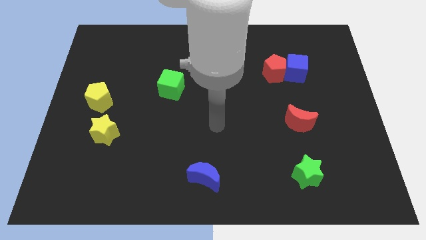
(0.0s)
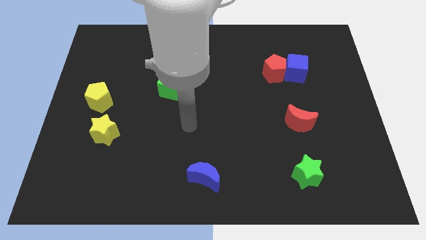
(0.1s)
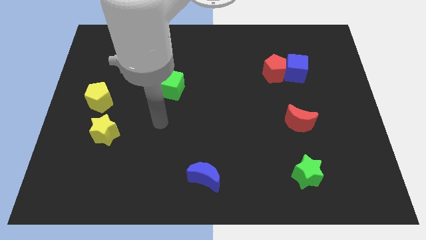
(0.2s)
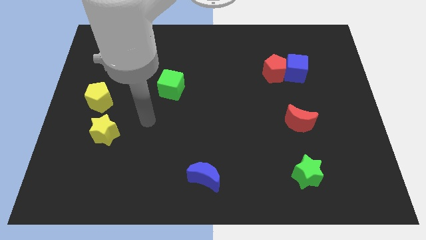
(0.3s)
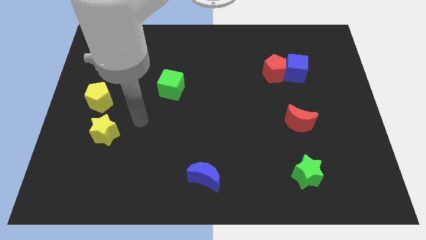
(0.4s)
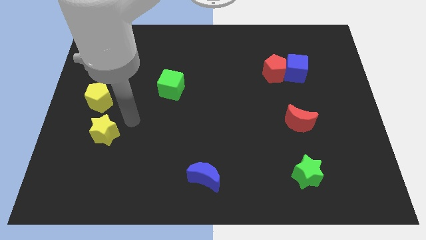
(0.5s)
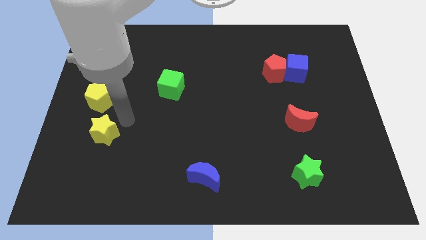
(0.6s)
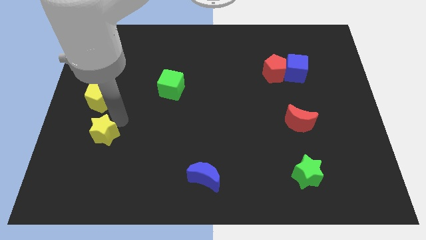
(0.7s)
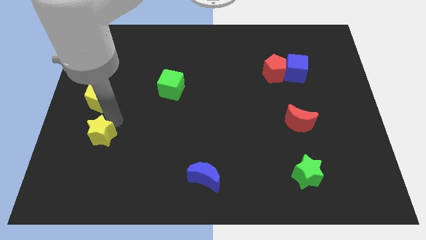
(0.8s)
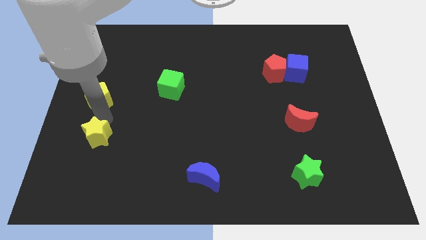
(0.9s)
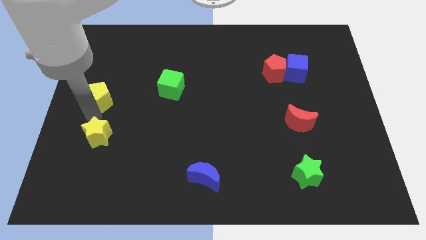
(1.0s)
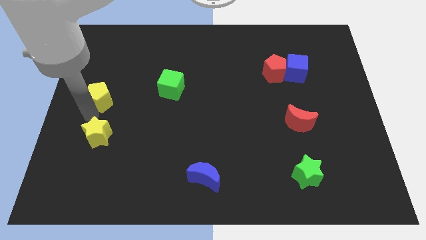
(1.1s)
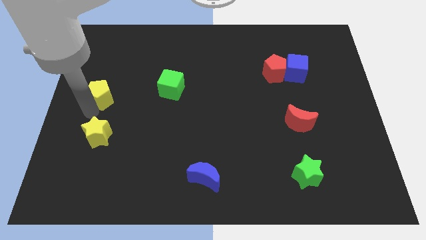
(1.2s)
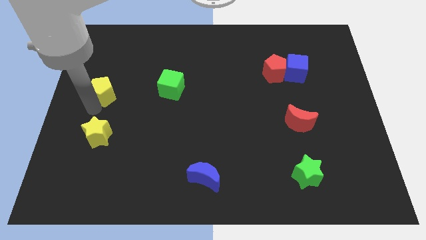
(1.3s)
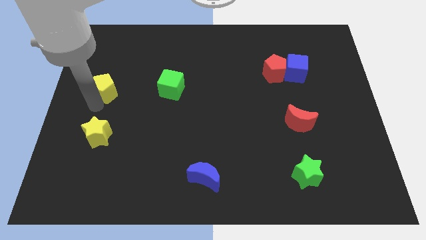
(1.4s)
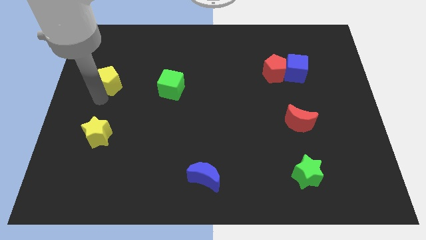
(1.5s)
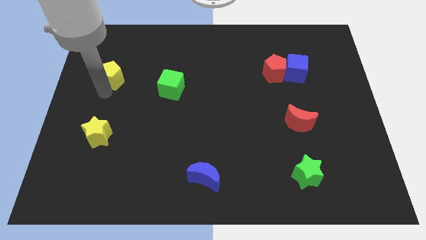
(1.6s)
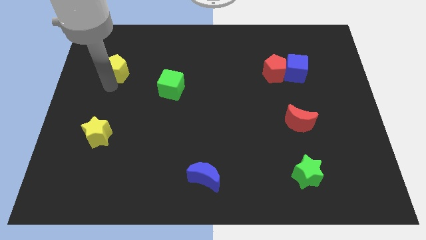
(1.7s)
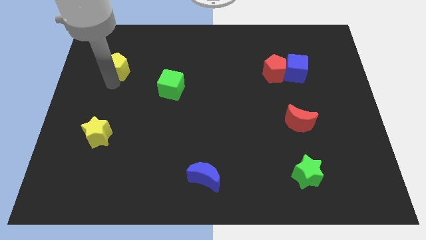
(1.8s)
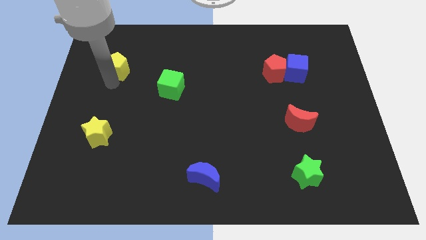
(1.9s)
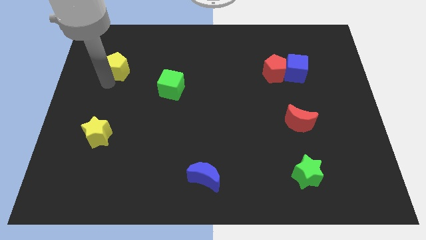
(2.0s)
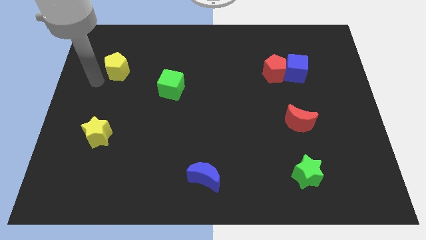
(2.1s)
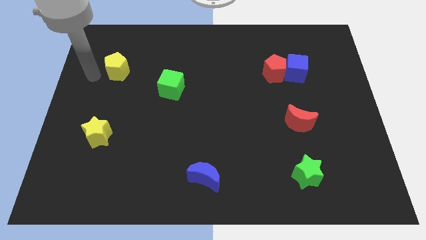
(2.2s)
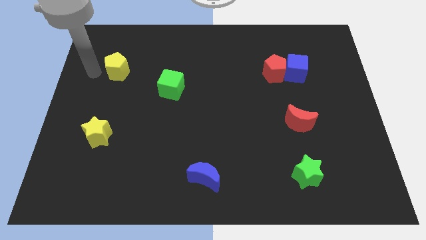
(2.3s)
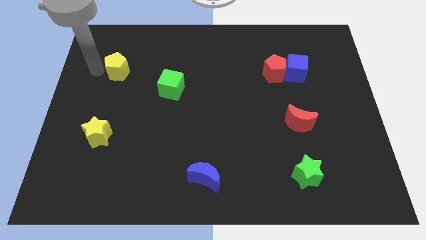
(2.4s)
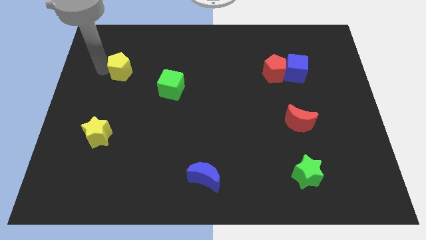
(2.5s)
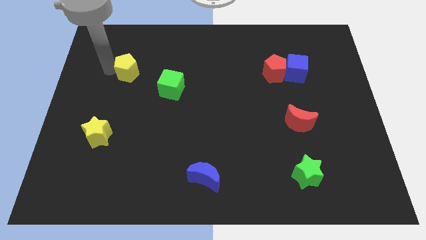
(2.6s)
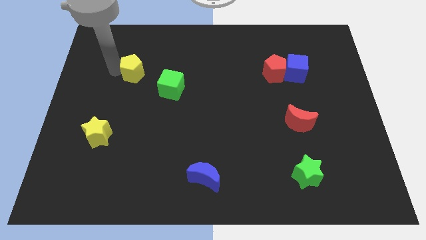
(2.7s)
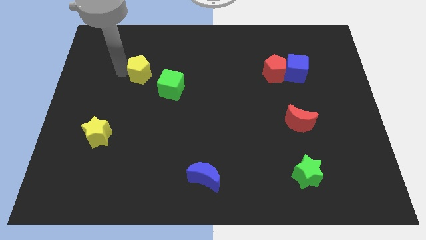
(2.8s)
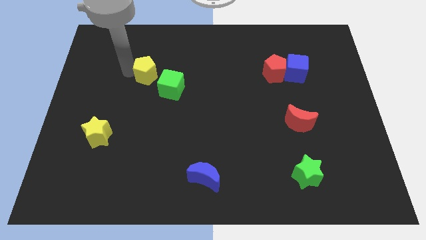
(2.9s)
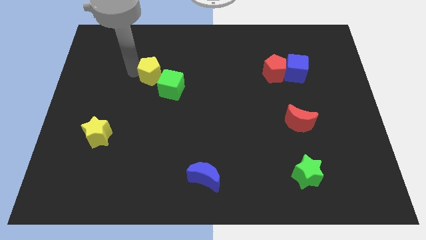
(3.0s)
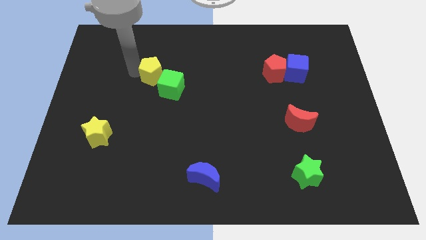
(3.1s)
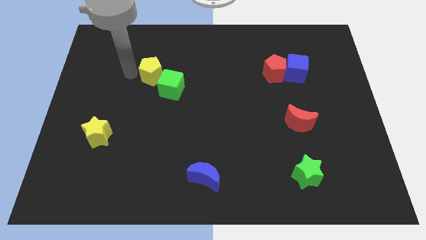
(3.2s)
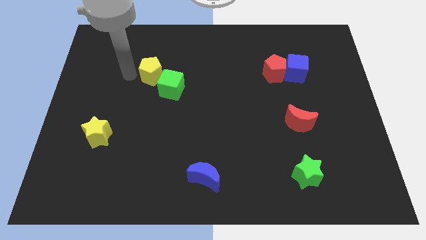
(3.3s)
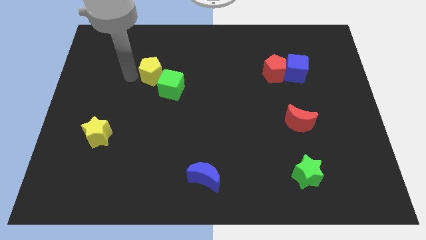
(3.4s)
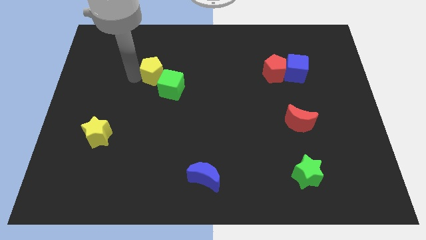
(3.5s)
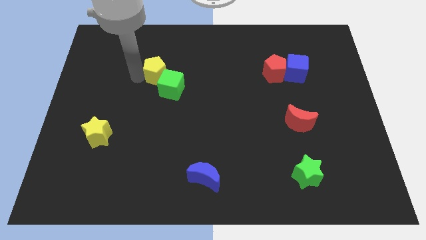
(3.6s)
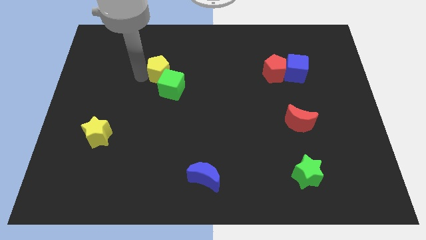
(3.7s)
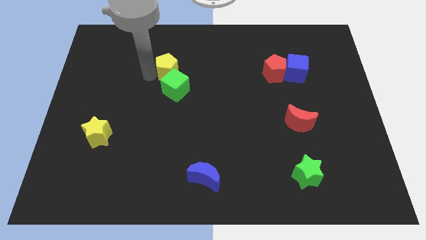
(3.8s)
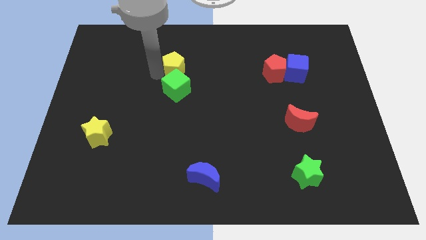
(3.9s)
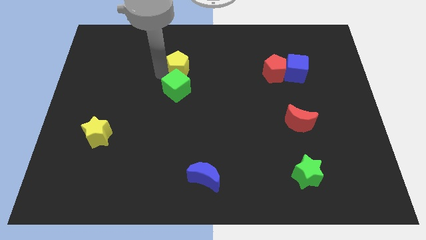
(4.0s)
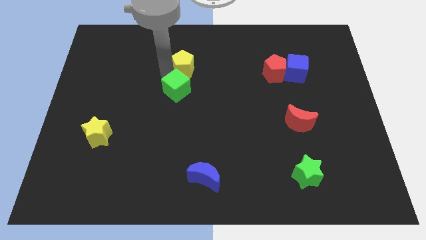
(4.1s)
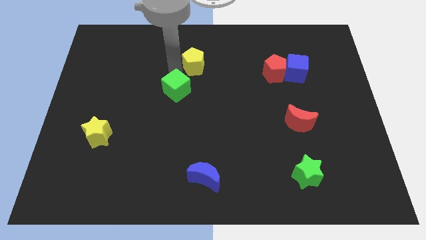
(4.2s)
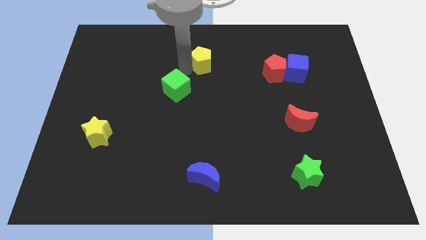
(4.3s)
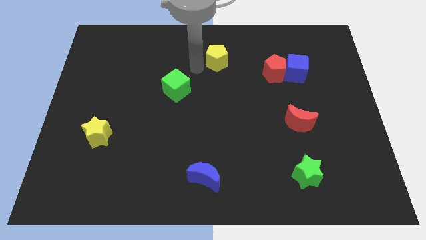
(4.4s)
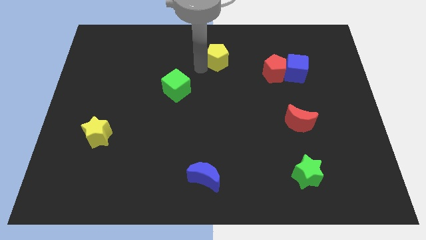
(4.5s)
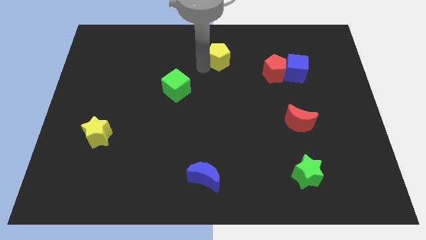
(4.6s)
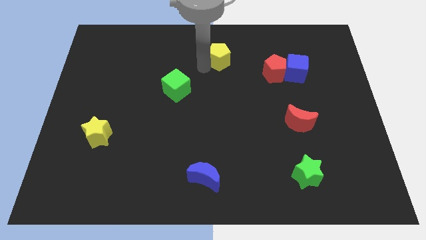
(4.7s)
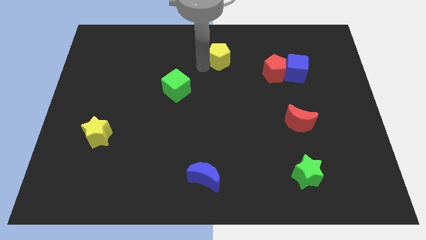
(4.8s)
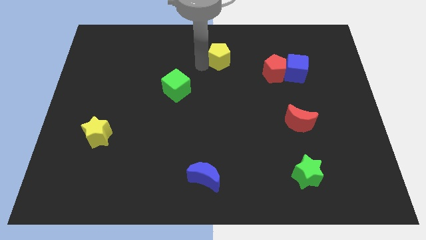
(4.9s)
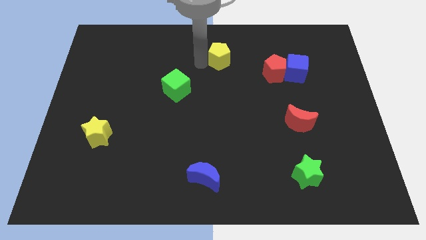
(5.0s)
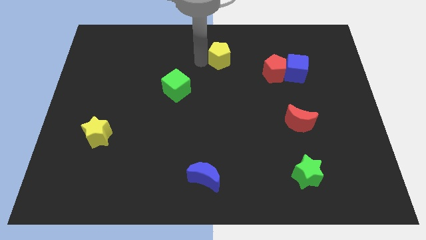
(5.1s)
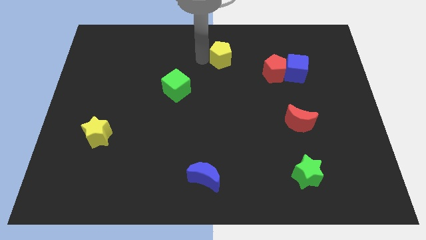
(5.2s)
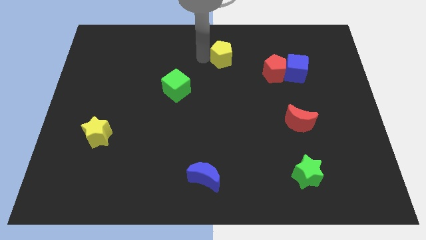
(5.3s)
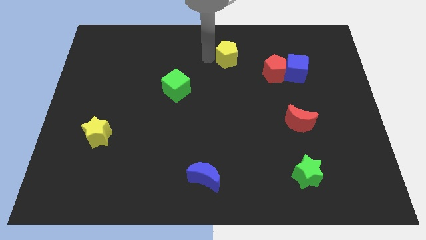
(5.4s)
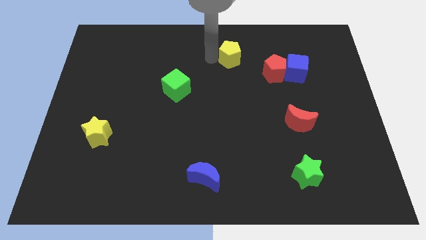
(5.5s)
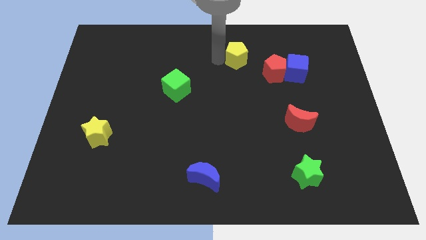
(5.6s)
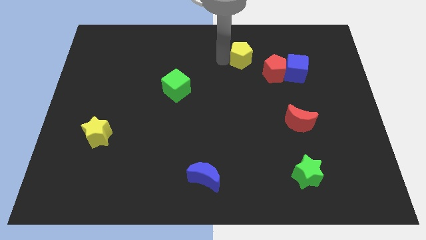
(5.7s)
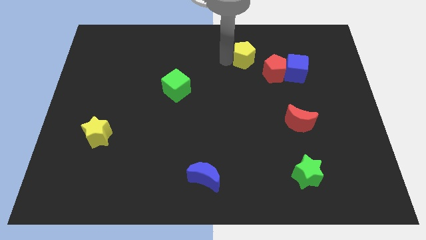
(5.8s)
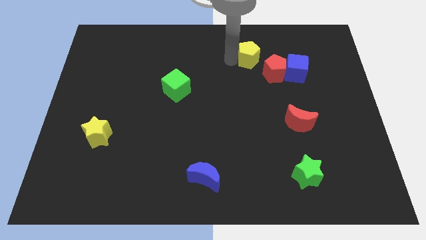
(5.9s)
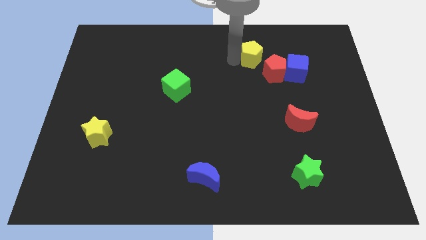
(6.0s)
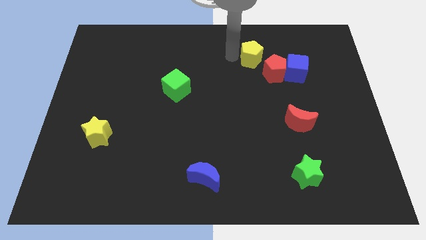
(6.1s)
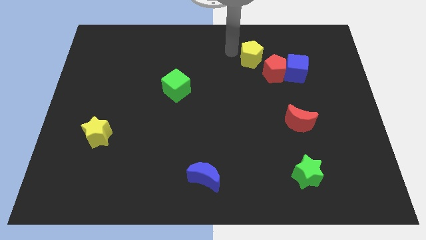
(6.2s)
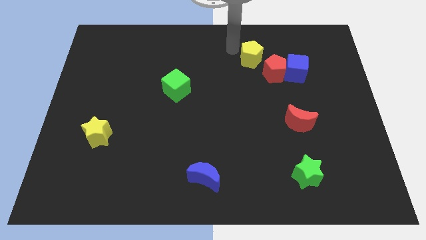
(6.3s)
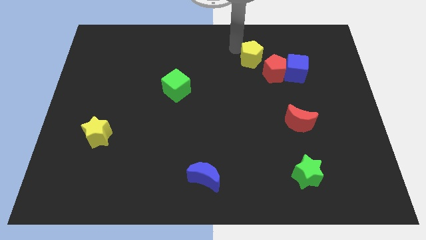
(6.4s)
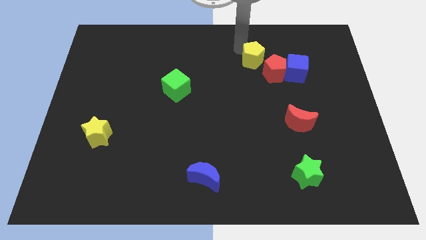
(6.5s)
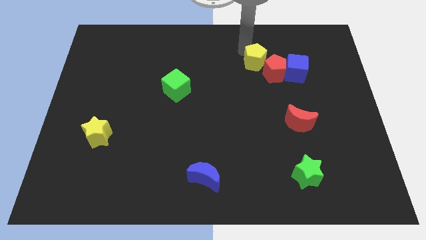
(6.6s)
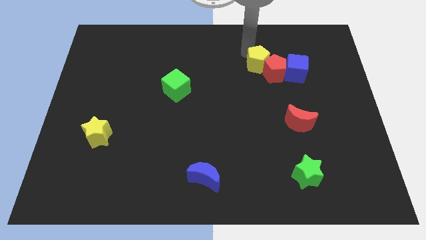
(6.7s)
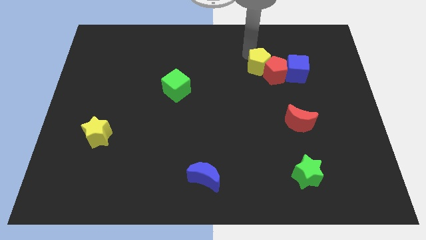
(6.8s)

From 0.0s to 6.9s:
put the yellow pentagon next to the red pentagon

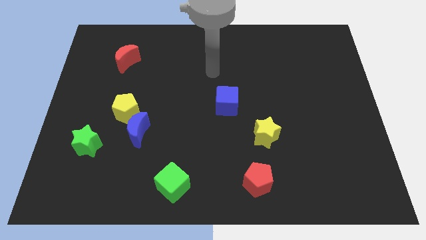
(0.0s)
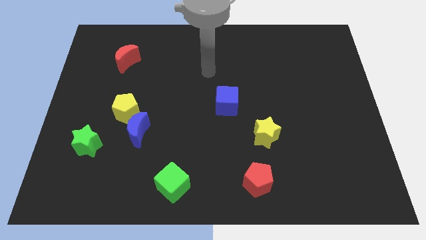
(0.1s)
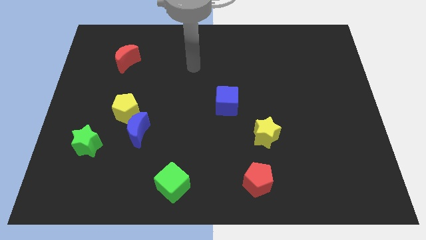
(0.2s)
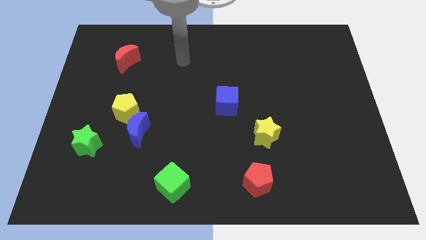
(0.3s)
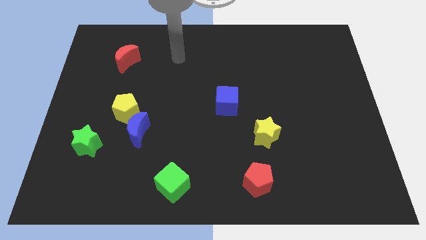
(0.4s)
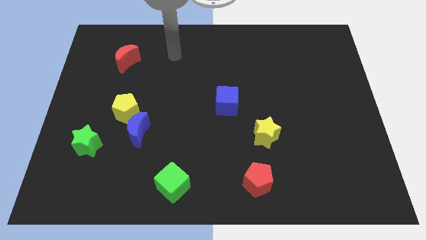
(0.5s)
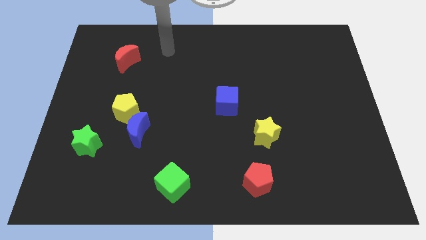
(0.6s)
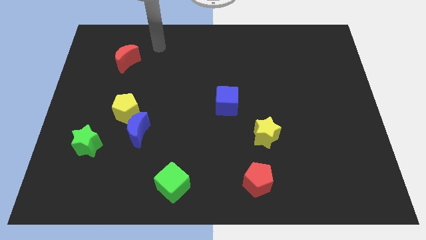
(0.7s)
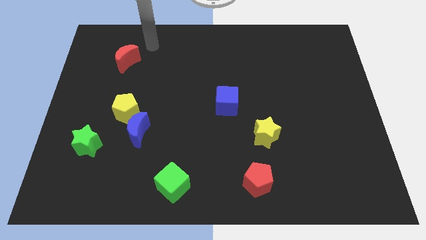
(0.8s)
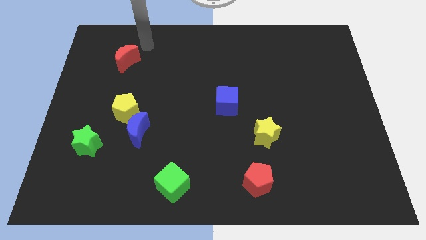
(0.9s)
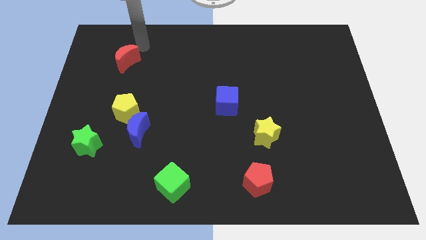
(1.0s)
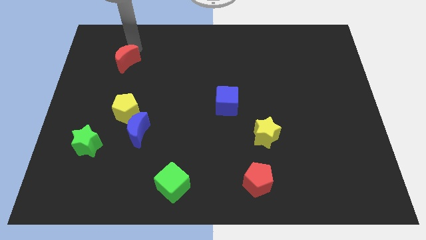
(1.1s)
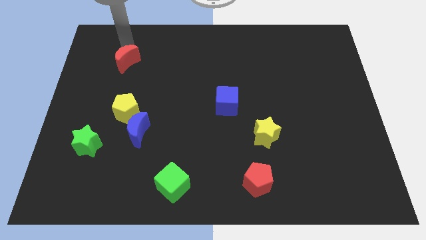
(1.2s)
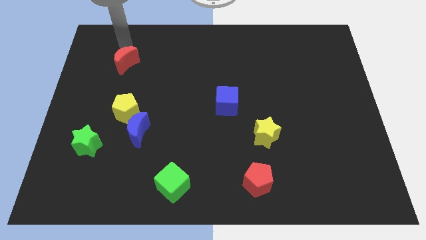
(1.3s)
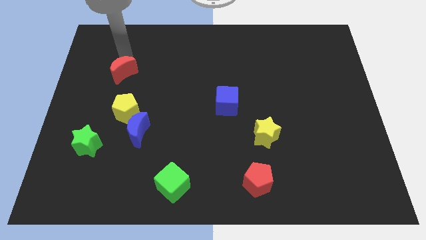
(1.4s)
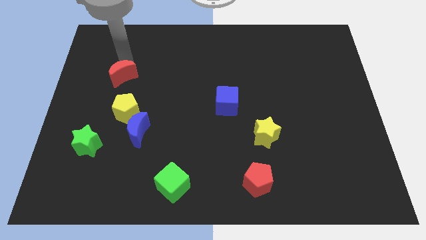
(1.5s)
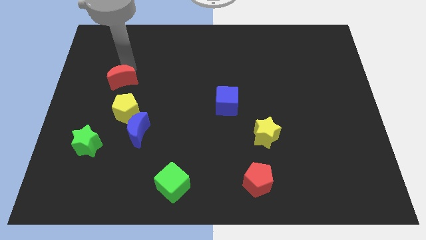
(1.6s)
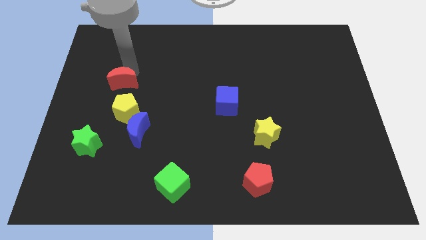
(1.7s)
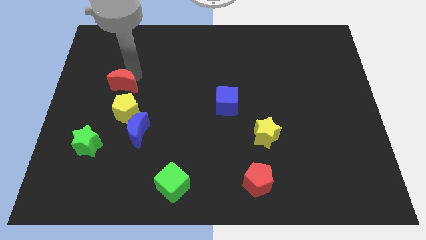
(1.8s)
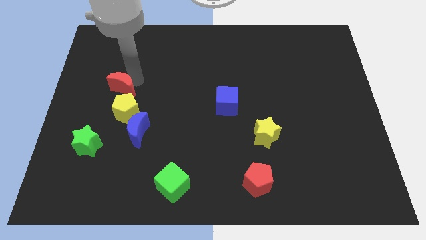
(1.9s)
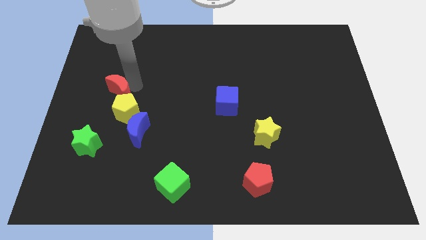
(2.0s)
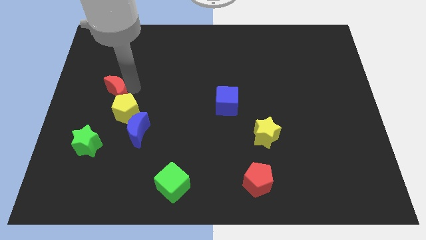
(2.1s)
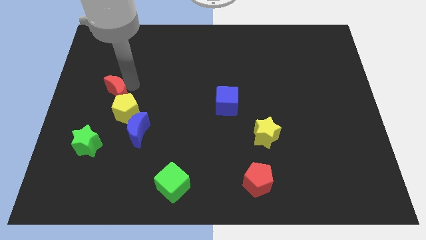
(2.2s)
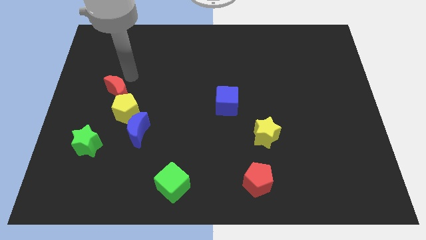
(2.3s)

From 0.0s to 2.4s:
push the red moon to the yellow pentagon
